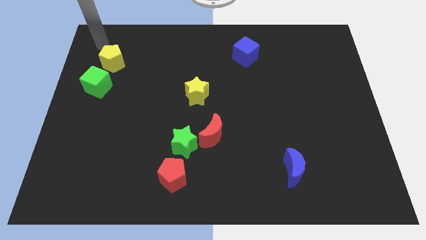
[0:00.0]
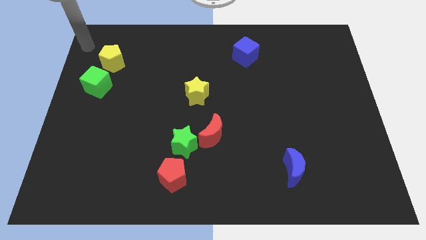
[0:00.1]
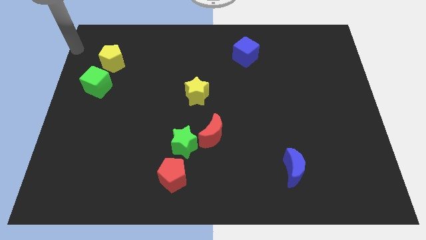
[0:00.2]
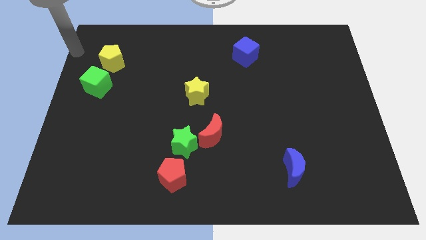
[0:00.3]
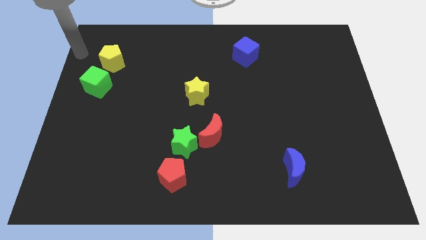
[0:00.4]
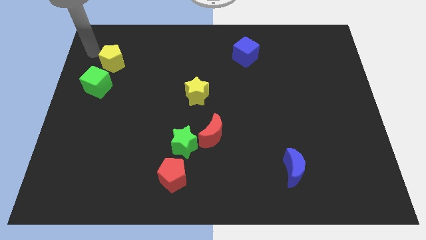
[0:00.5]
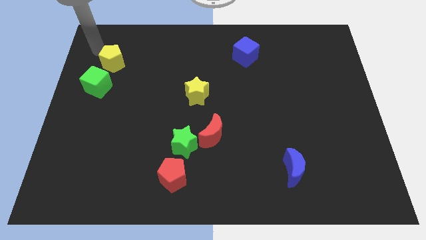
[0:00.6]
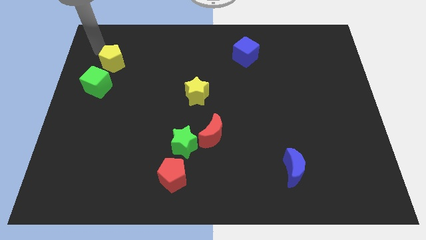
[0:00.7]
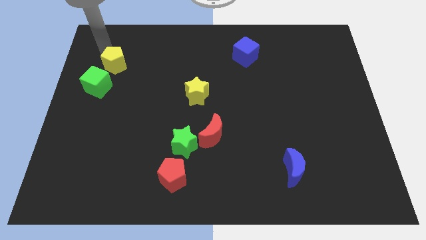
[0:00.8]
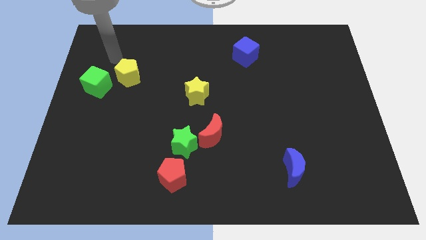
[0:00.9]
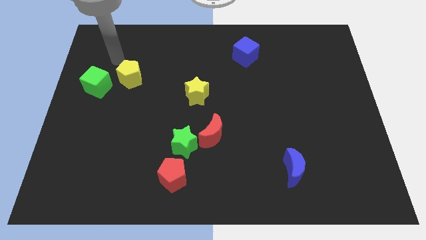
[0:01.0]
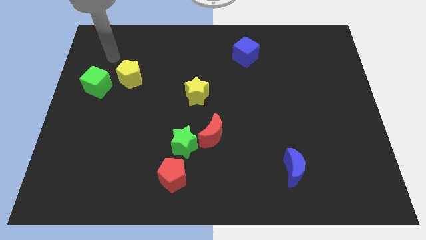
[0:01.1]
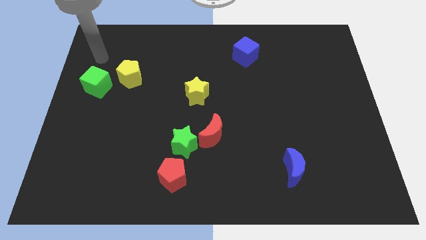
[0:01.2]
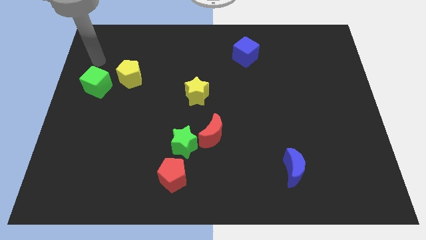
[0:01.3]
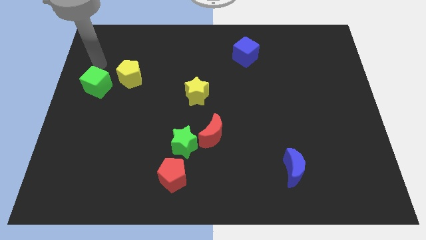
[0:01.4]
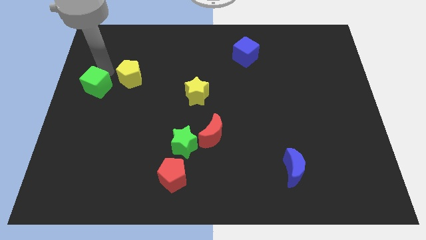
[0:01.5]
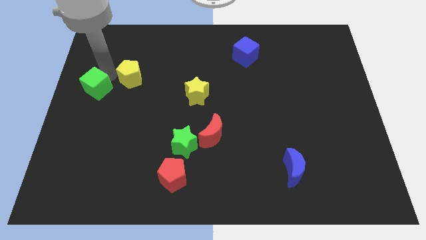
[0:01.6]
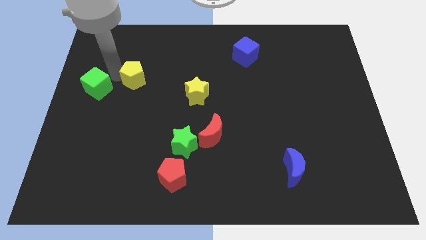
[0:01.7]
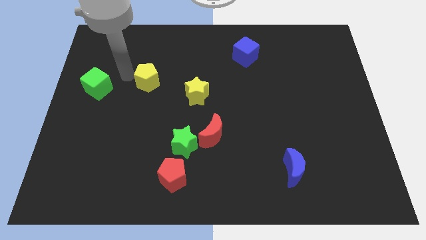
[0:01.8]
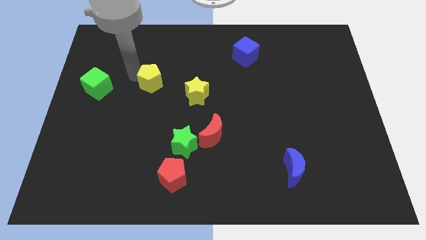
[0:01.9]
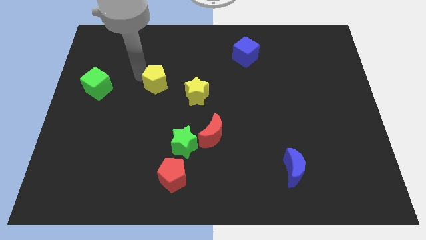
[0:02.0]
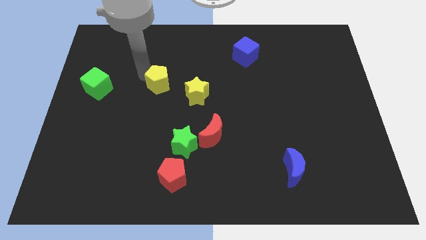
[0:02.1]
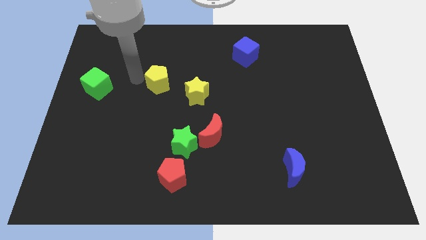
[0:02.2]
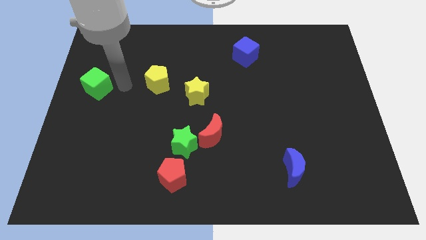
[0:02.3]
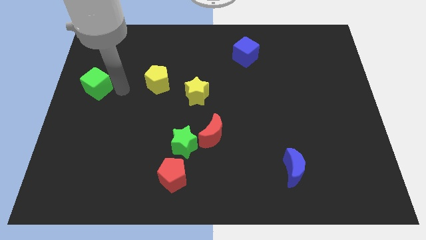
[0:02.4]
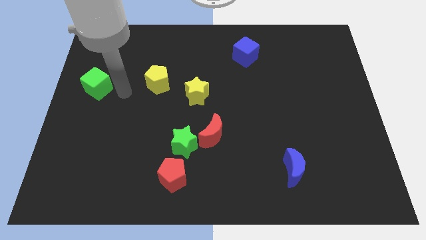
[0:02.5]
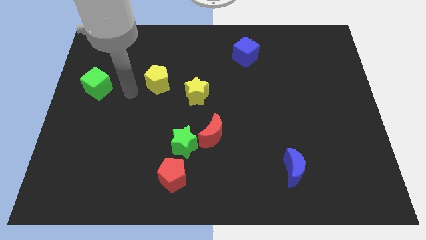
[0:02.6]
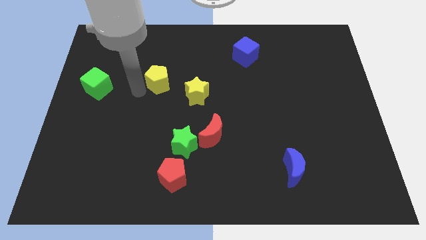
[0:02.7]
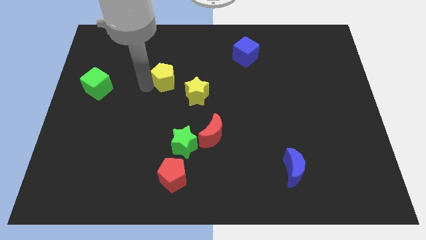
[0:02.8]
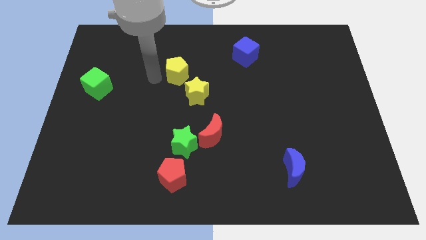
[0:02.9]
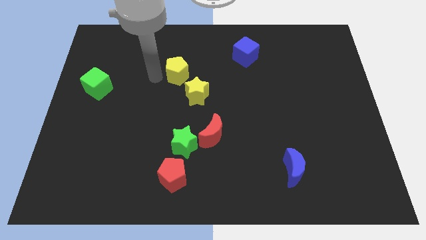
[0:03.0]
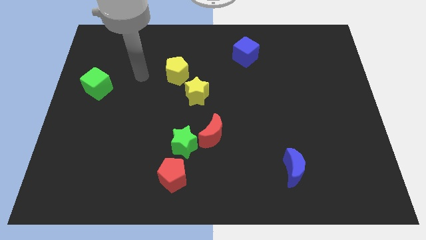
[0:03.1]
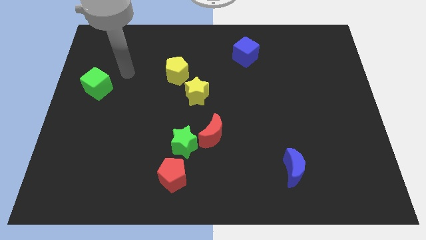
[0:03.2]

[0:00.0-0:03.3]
move yellow pentagon near yellow star

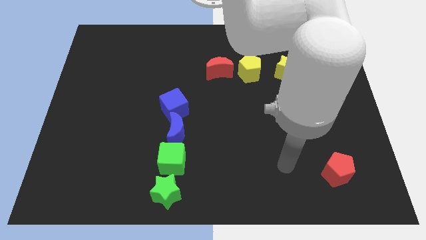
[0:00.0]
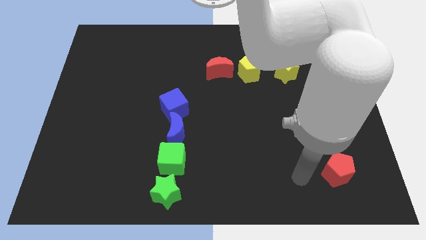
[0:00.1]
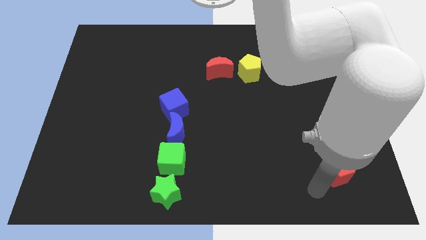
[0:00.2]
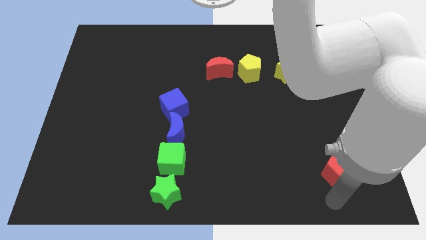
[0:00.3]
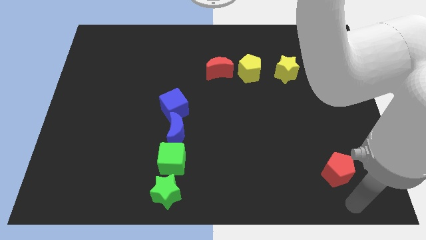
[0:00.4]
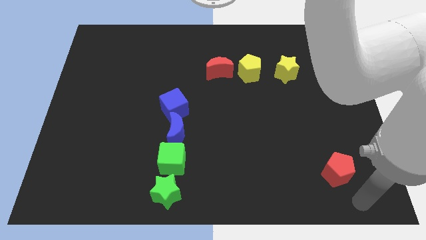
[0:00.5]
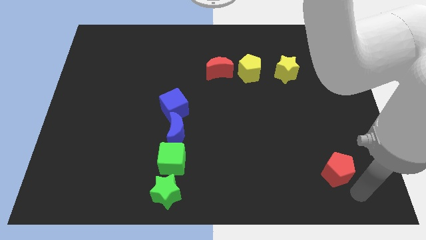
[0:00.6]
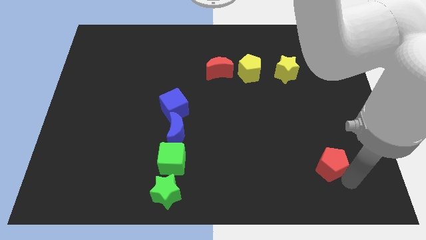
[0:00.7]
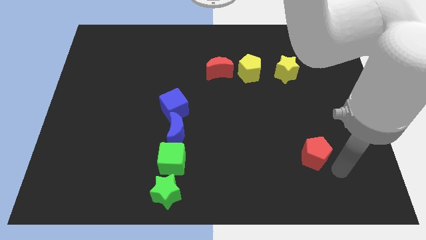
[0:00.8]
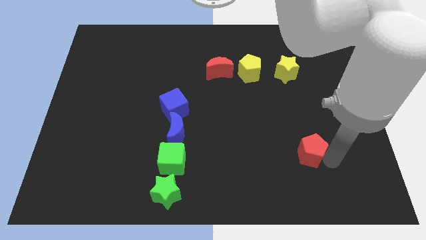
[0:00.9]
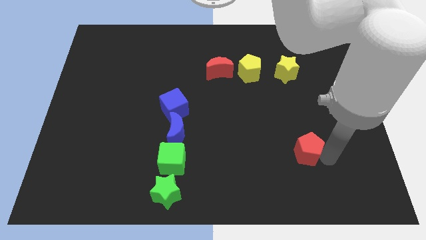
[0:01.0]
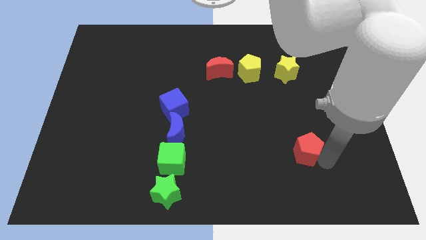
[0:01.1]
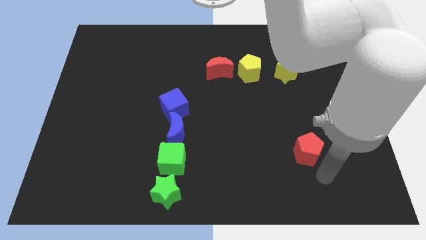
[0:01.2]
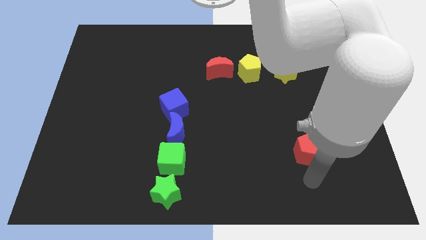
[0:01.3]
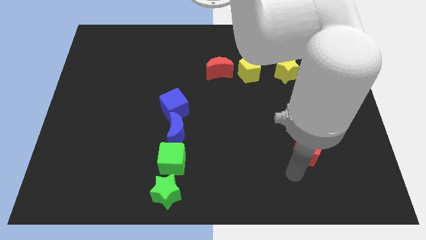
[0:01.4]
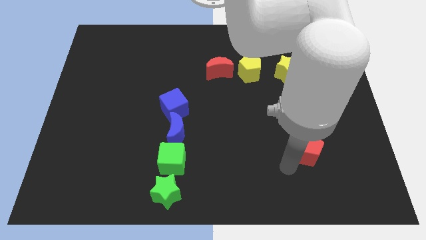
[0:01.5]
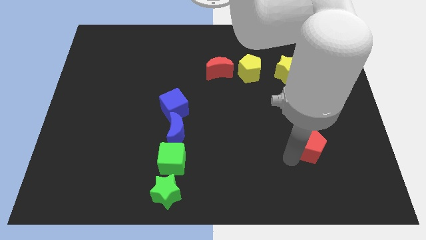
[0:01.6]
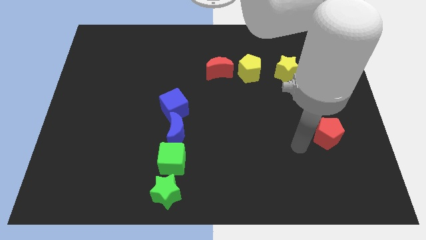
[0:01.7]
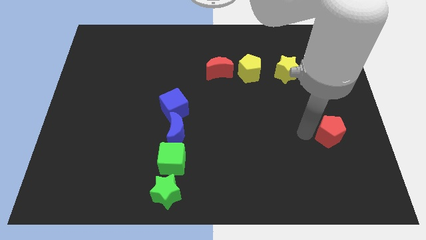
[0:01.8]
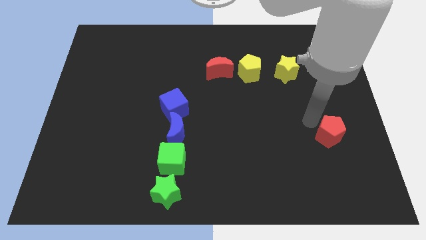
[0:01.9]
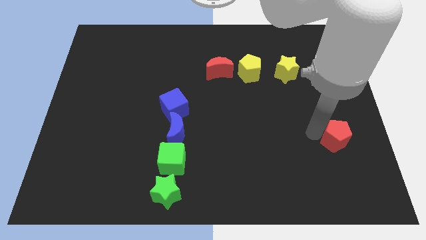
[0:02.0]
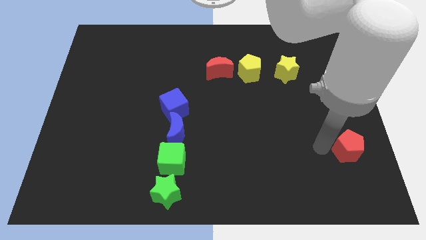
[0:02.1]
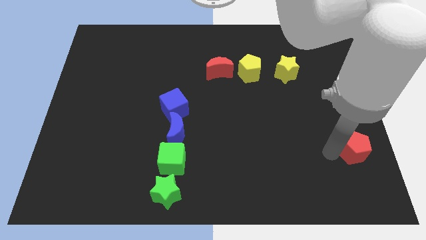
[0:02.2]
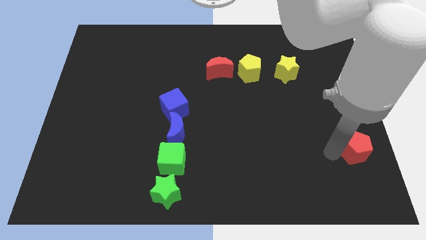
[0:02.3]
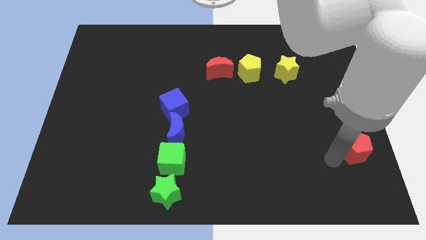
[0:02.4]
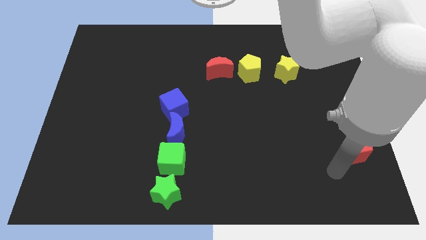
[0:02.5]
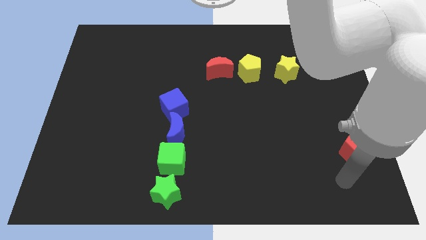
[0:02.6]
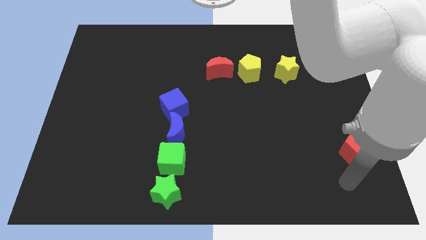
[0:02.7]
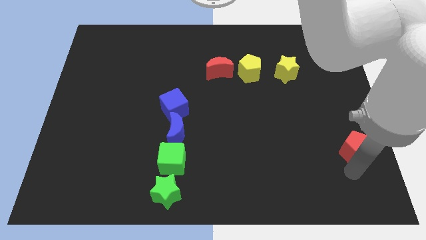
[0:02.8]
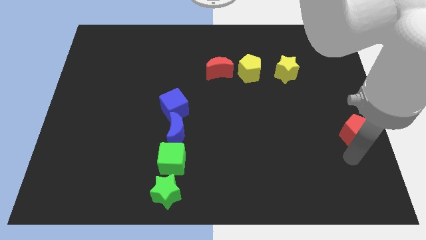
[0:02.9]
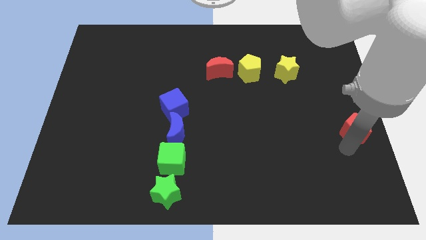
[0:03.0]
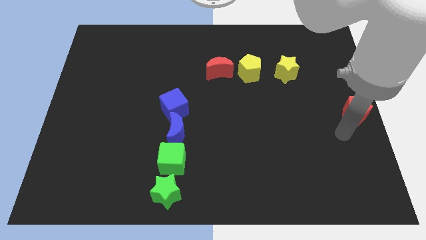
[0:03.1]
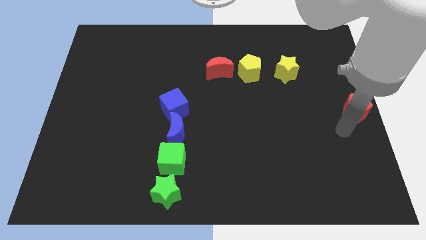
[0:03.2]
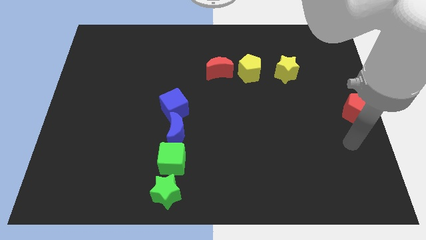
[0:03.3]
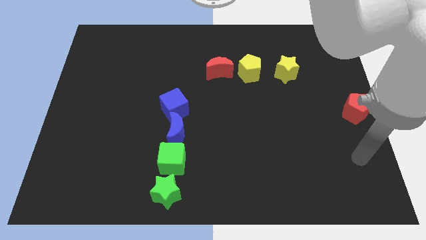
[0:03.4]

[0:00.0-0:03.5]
put the red pentagon to the right of the blue blocks

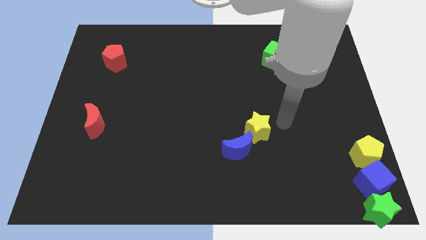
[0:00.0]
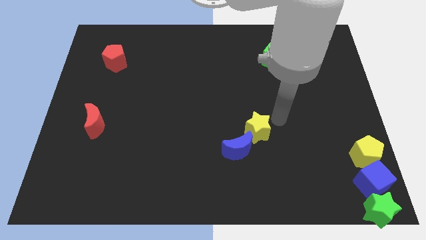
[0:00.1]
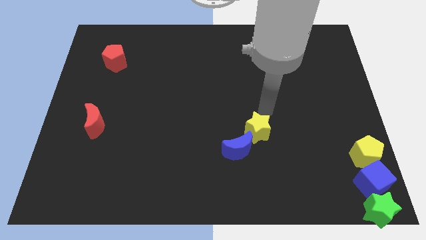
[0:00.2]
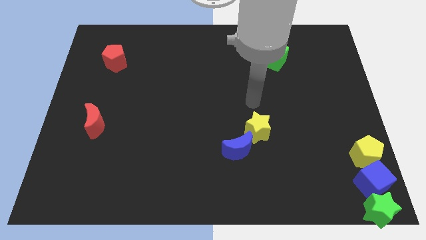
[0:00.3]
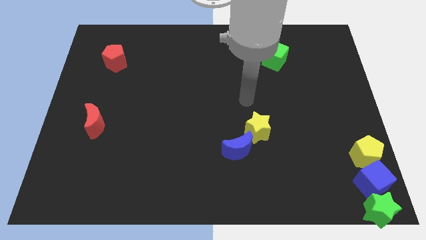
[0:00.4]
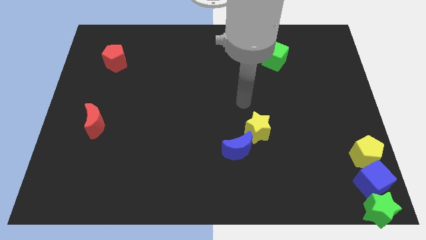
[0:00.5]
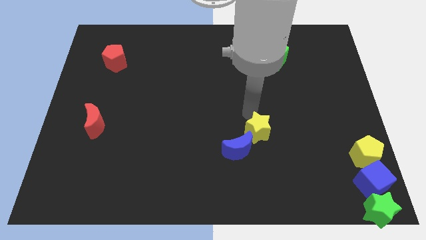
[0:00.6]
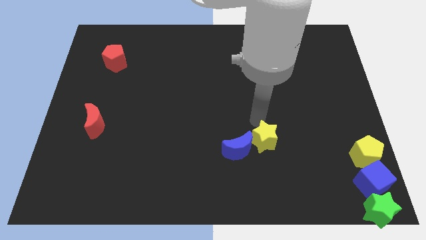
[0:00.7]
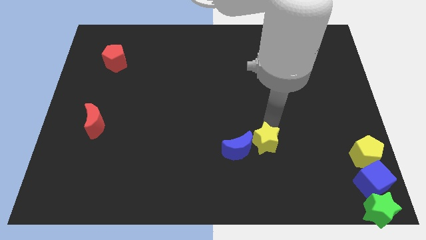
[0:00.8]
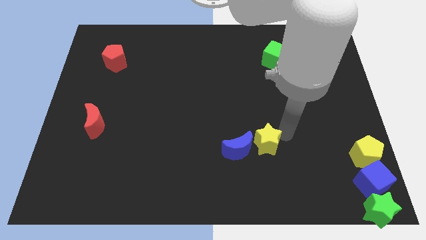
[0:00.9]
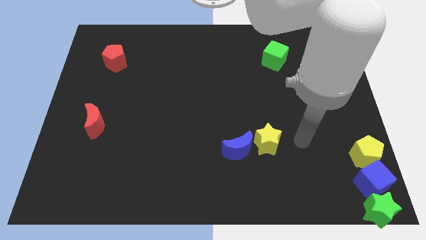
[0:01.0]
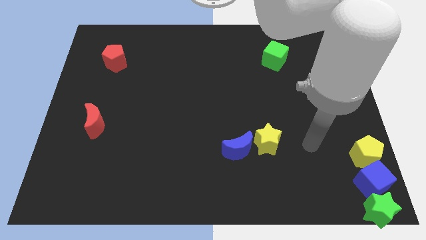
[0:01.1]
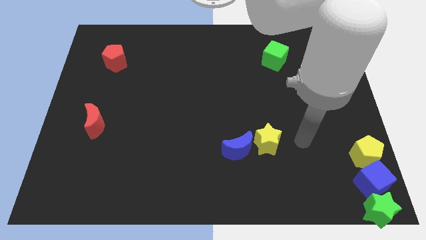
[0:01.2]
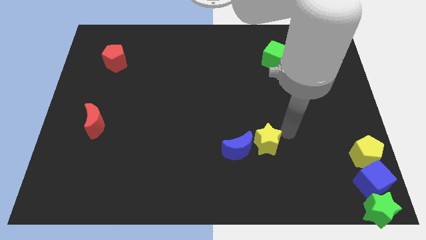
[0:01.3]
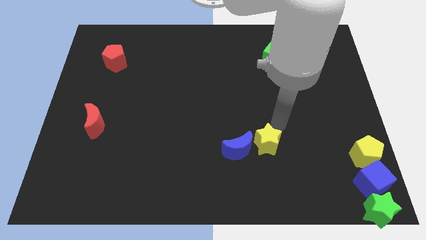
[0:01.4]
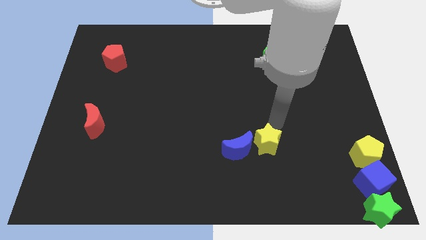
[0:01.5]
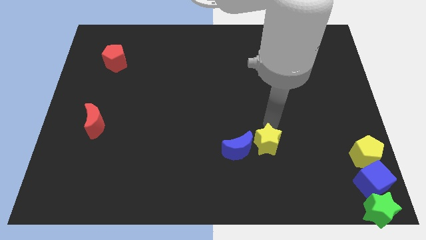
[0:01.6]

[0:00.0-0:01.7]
place the yellow star to the right side of the blue crescent

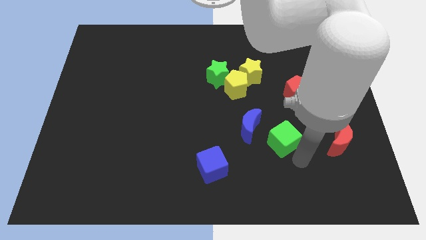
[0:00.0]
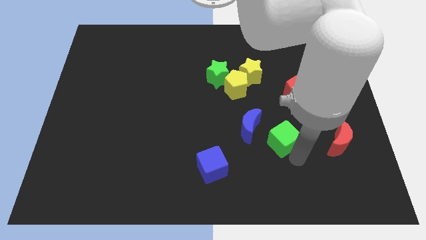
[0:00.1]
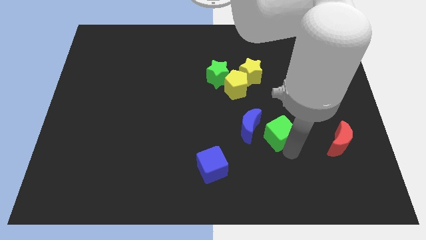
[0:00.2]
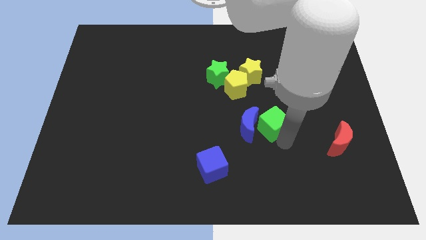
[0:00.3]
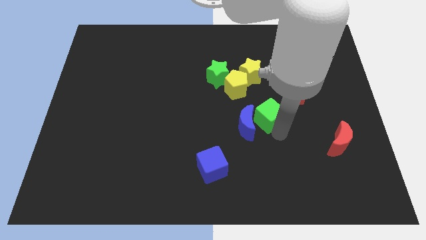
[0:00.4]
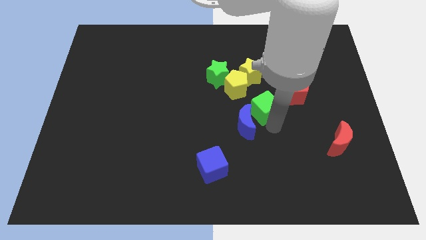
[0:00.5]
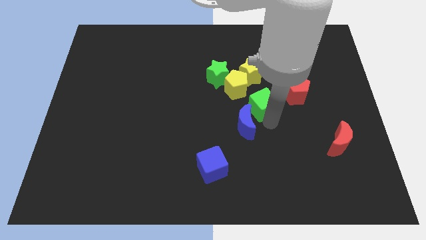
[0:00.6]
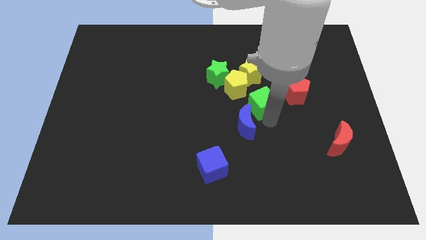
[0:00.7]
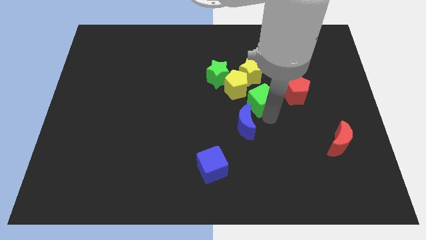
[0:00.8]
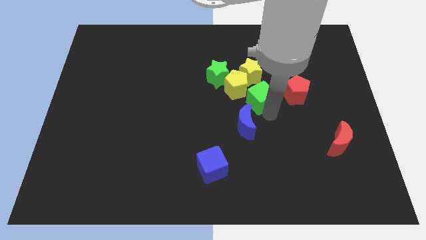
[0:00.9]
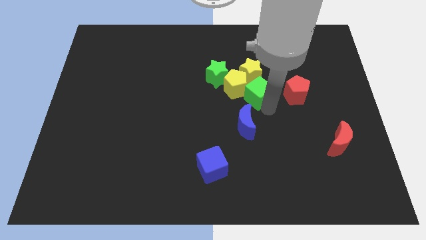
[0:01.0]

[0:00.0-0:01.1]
push the green cube into the group of yellow blocks
